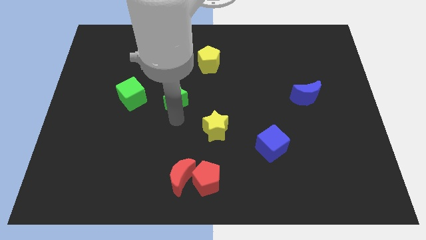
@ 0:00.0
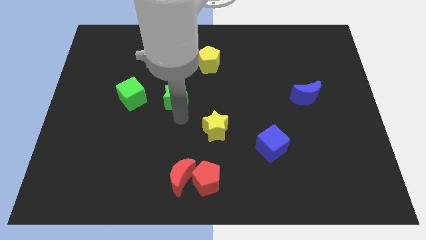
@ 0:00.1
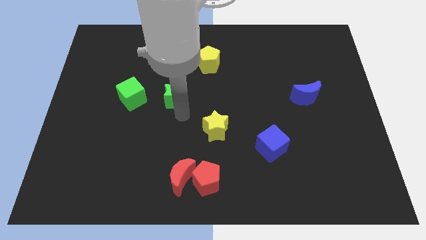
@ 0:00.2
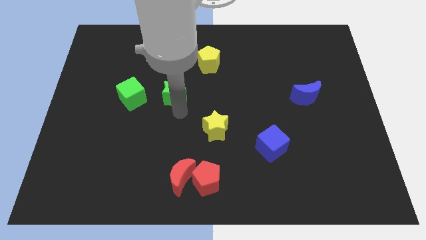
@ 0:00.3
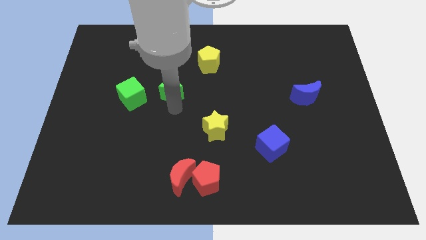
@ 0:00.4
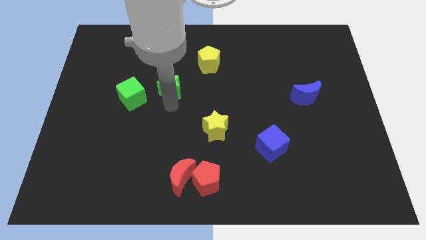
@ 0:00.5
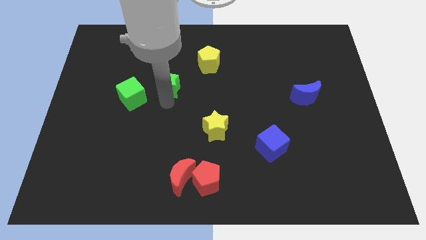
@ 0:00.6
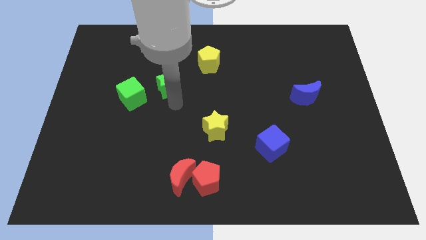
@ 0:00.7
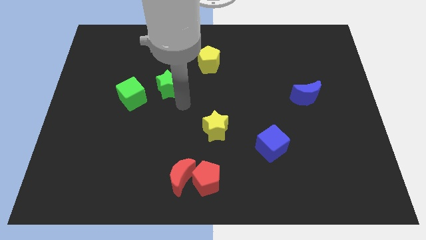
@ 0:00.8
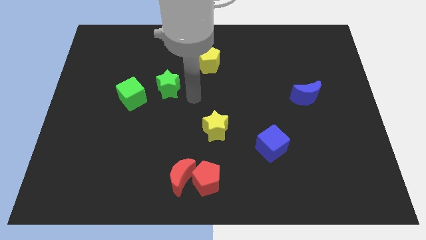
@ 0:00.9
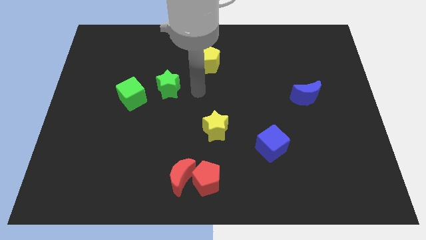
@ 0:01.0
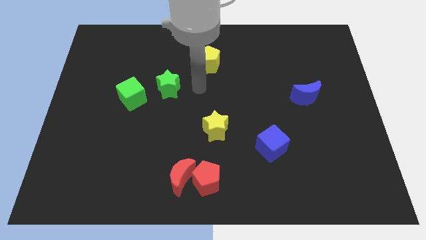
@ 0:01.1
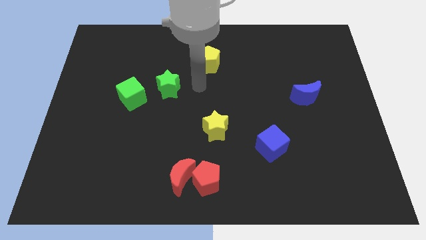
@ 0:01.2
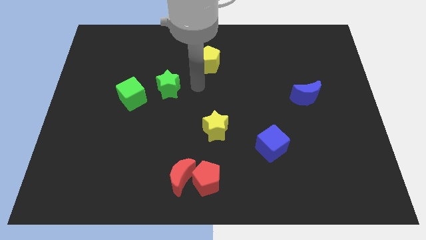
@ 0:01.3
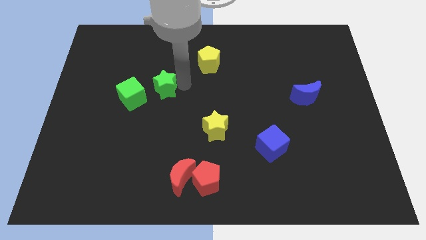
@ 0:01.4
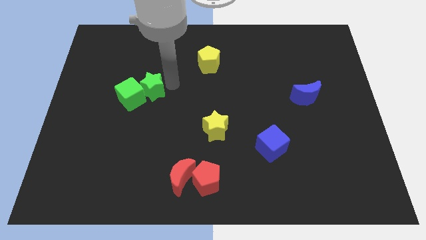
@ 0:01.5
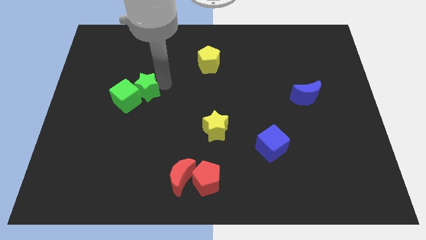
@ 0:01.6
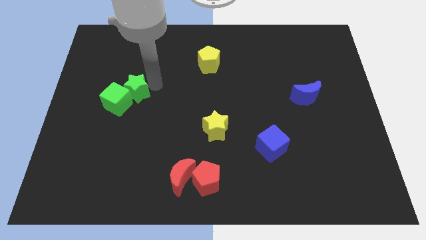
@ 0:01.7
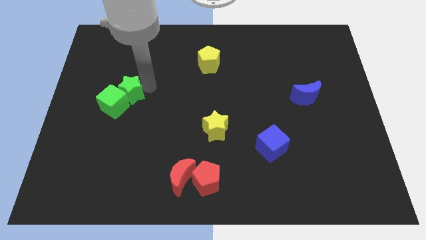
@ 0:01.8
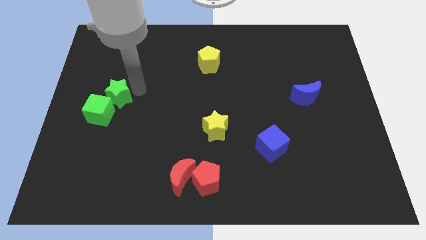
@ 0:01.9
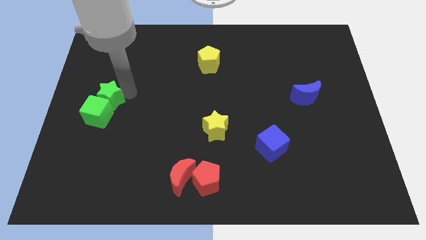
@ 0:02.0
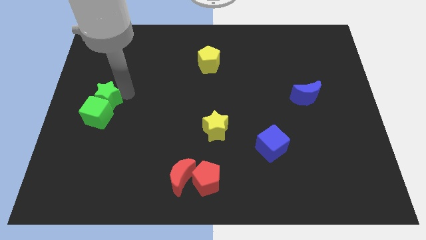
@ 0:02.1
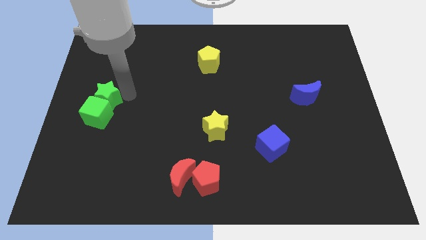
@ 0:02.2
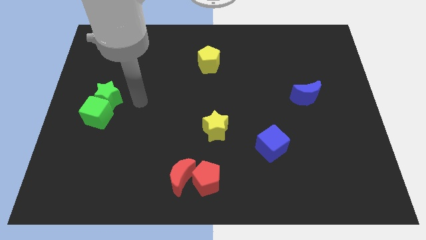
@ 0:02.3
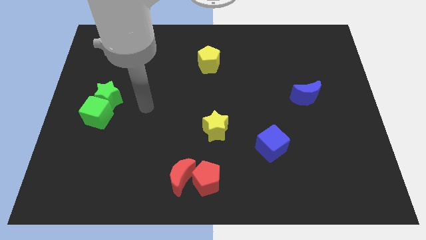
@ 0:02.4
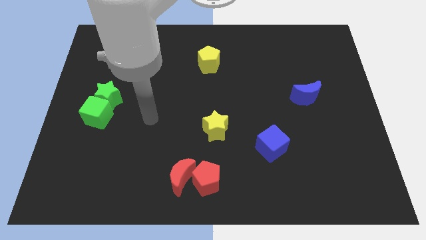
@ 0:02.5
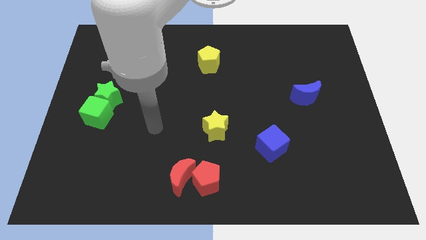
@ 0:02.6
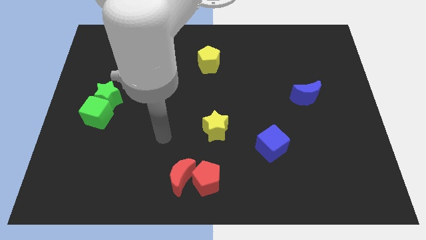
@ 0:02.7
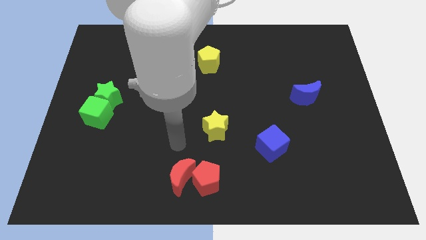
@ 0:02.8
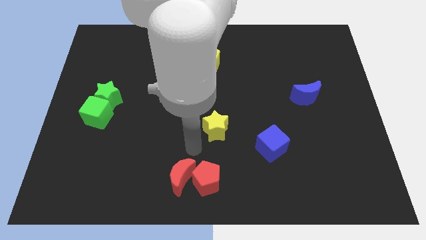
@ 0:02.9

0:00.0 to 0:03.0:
move green star green cube to the center left

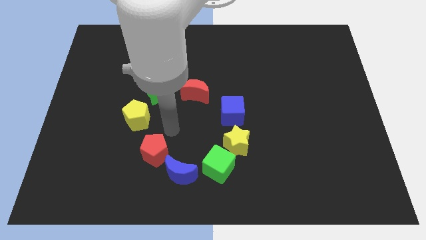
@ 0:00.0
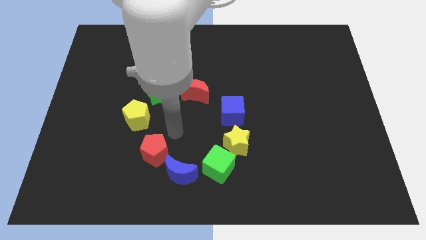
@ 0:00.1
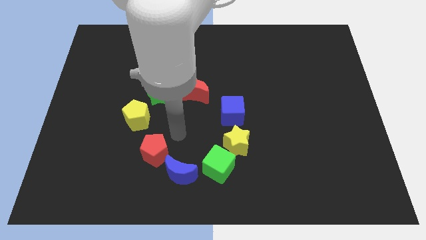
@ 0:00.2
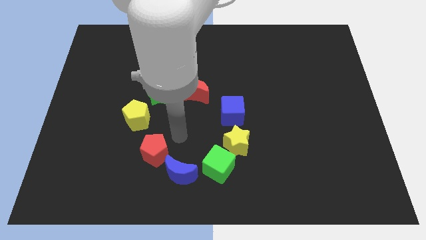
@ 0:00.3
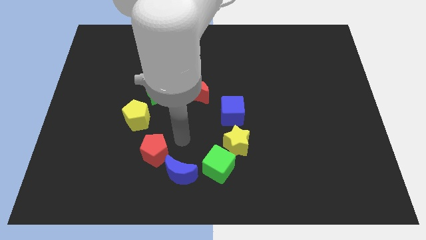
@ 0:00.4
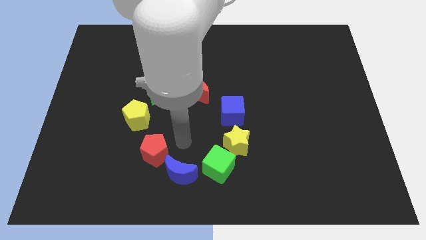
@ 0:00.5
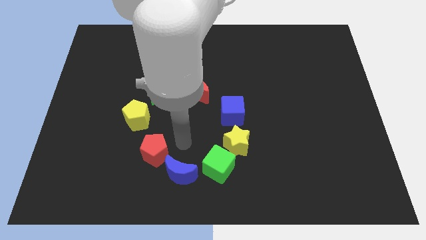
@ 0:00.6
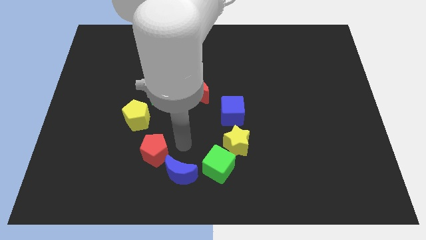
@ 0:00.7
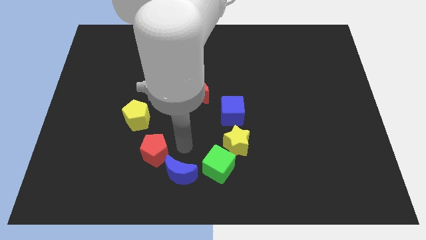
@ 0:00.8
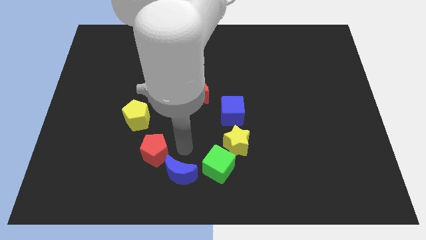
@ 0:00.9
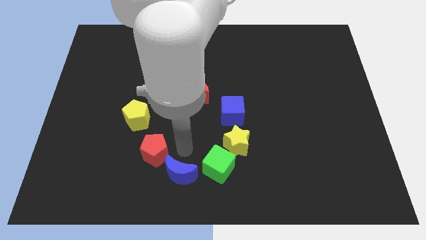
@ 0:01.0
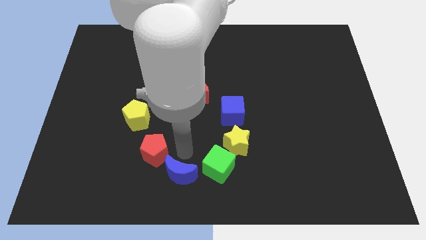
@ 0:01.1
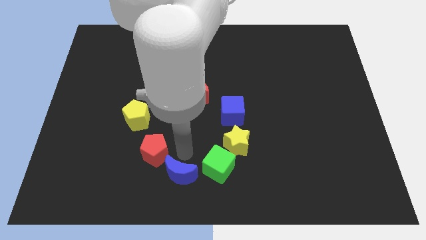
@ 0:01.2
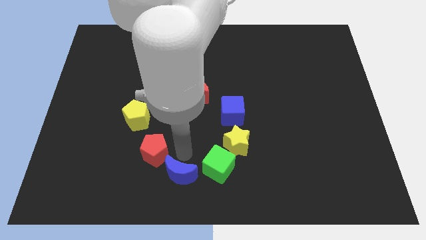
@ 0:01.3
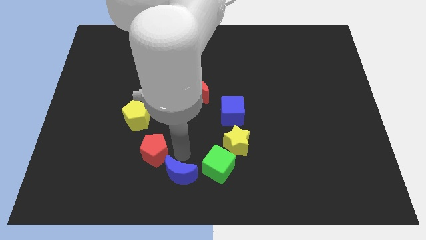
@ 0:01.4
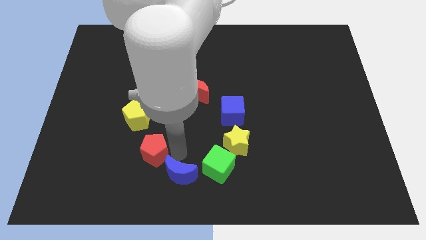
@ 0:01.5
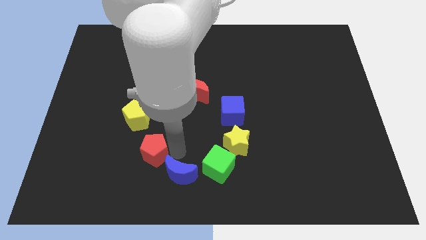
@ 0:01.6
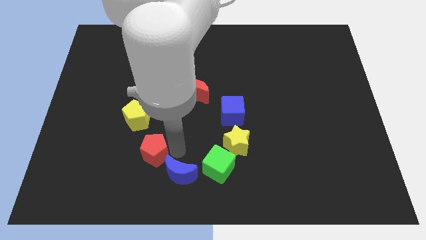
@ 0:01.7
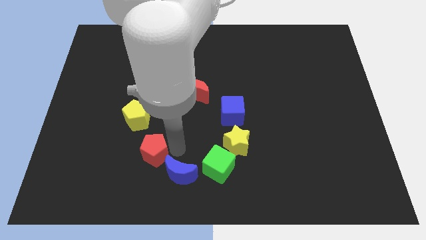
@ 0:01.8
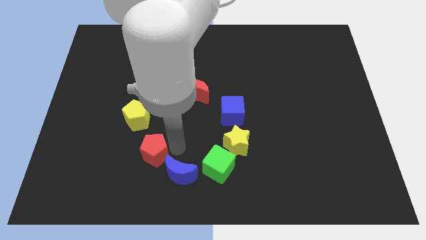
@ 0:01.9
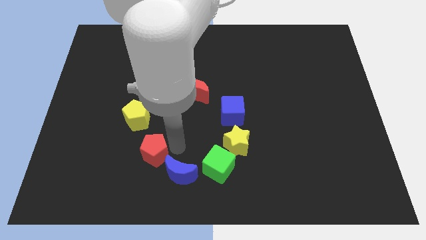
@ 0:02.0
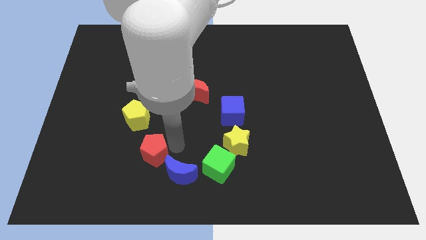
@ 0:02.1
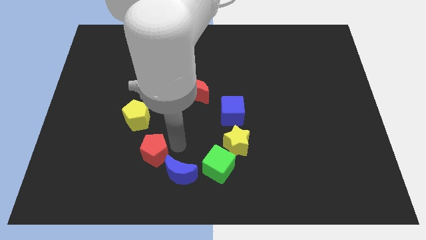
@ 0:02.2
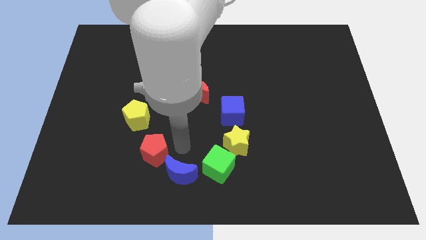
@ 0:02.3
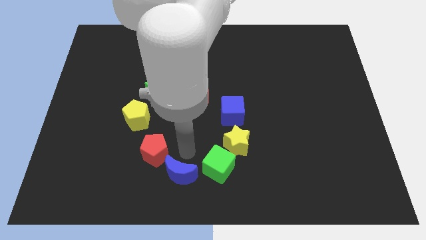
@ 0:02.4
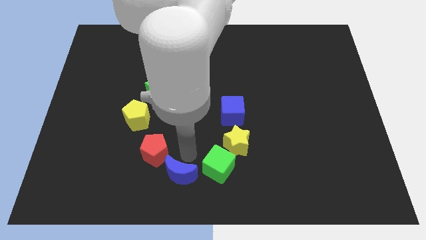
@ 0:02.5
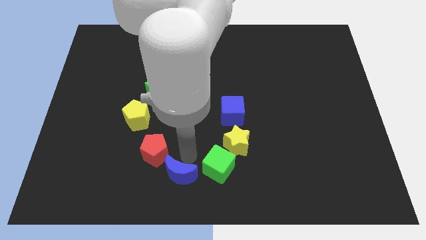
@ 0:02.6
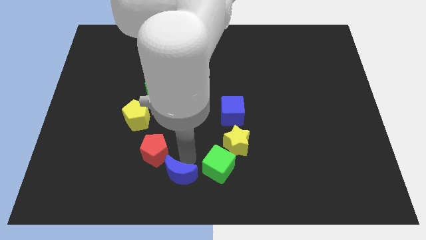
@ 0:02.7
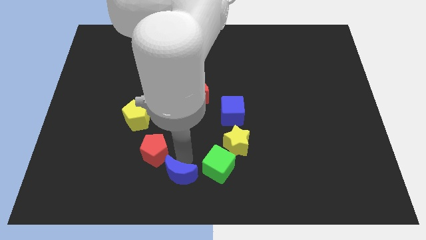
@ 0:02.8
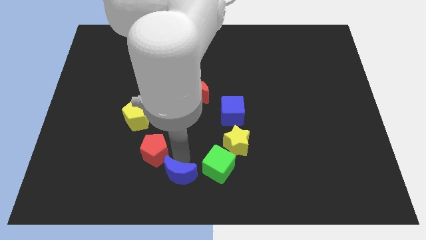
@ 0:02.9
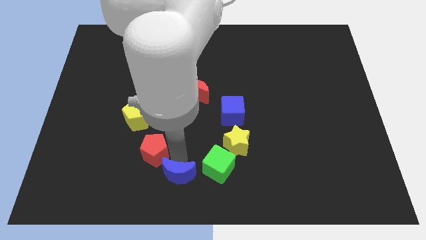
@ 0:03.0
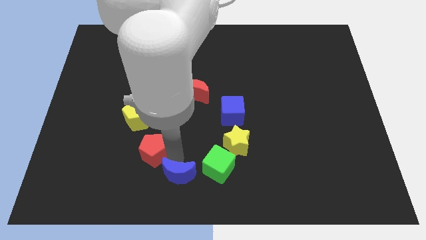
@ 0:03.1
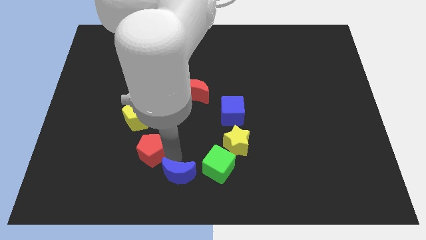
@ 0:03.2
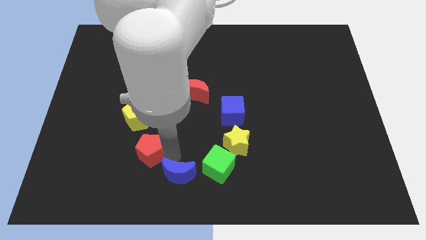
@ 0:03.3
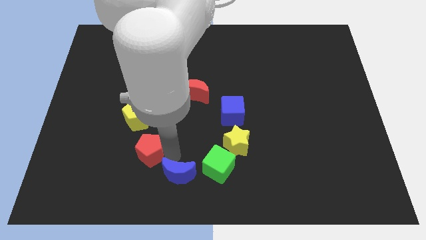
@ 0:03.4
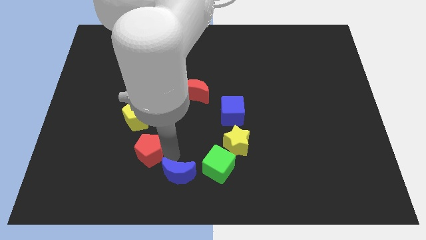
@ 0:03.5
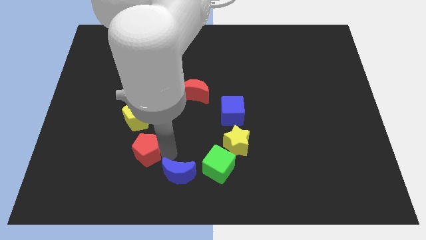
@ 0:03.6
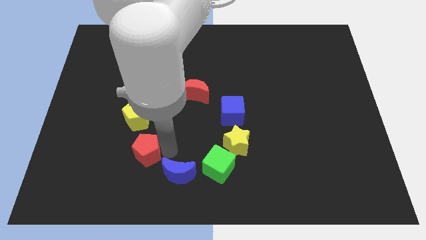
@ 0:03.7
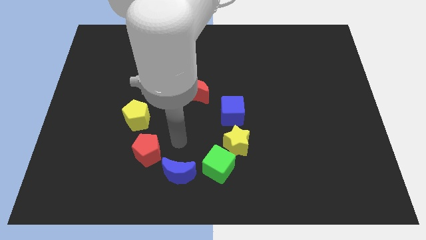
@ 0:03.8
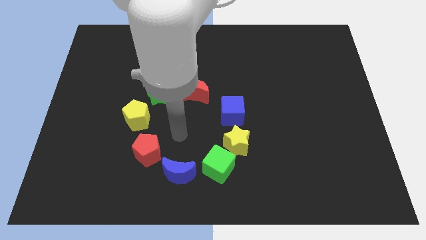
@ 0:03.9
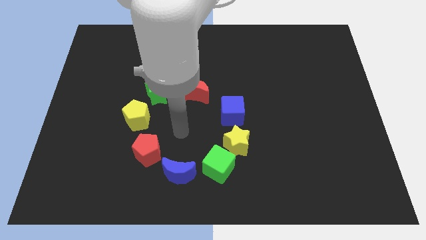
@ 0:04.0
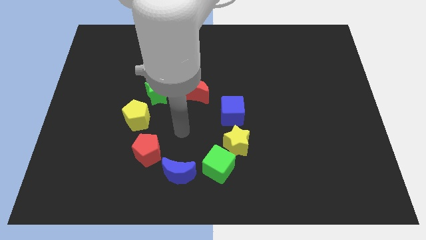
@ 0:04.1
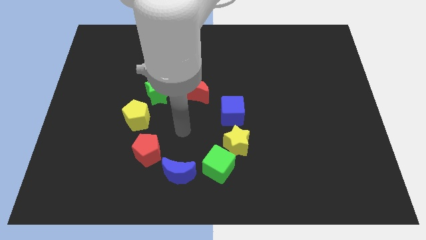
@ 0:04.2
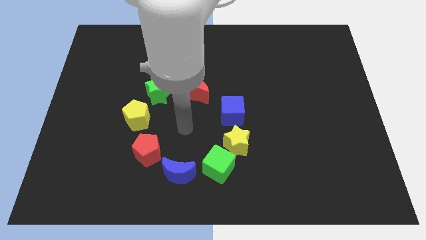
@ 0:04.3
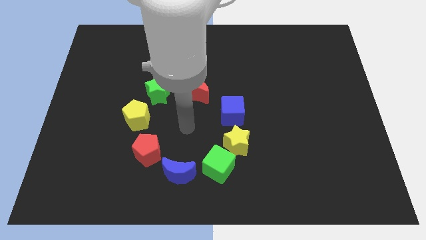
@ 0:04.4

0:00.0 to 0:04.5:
place your arm in the center of the blocks

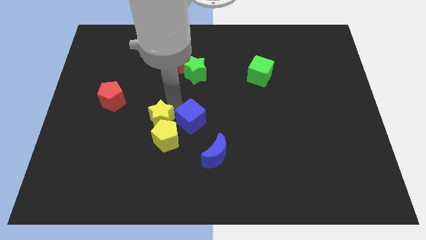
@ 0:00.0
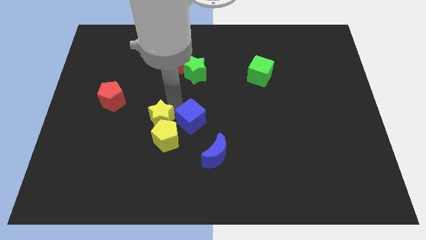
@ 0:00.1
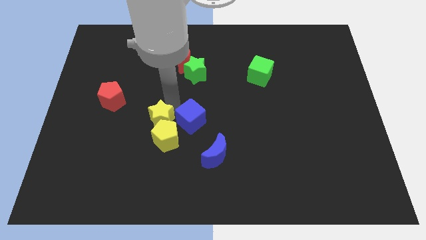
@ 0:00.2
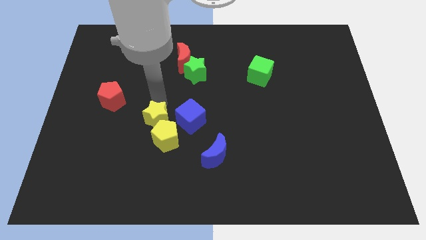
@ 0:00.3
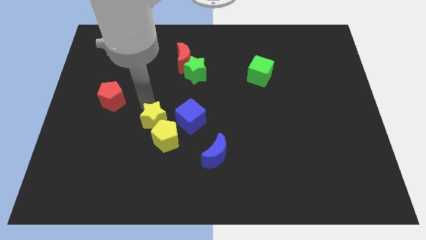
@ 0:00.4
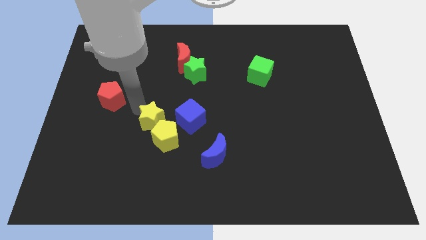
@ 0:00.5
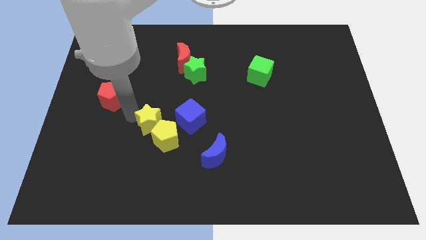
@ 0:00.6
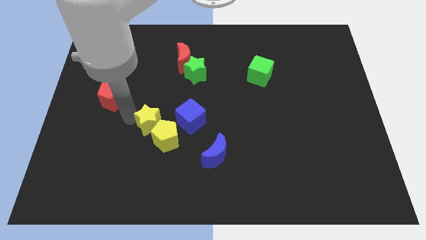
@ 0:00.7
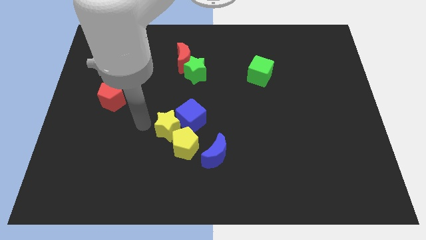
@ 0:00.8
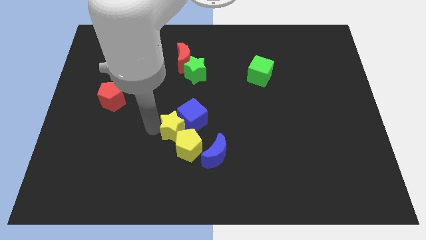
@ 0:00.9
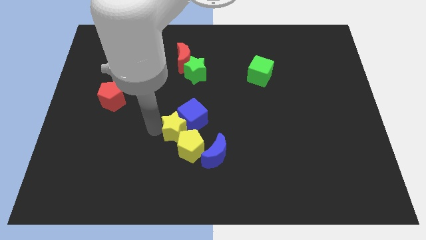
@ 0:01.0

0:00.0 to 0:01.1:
push yellow star into yellow pentagon

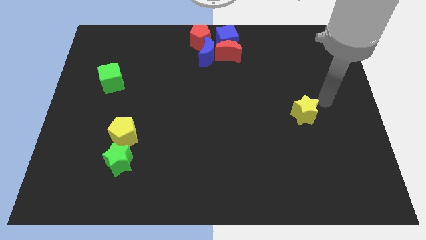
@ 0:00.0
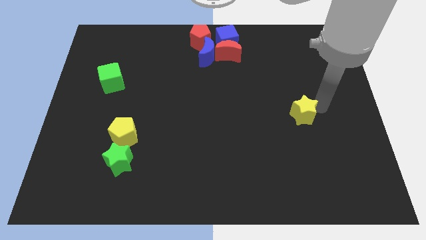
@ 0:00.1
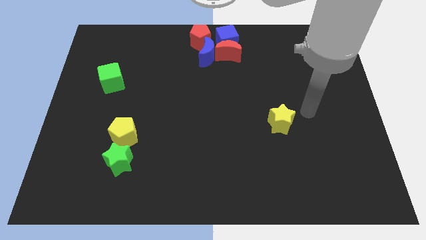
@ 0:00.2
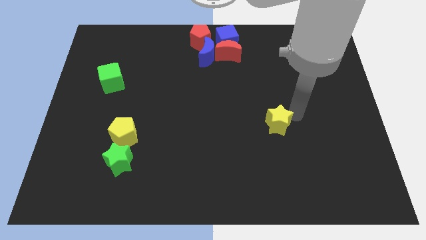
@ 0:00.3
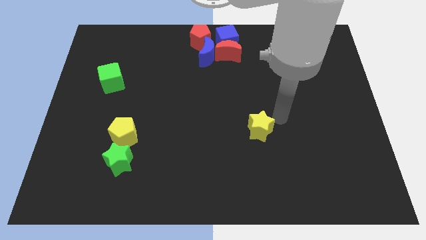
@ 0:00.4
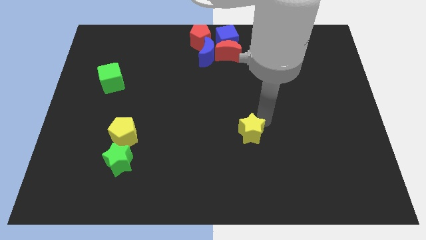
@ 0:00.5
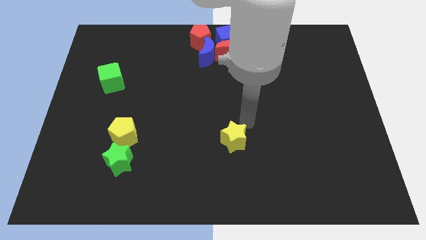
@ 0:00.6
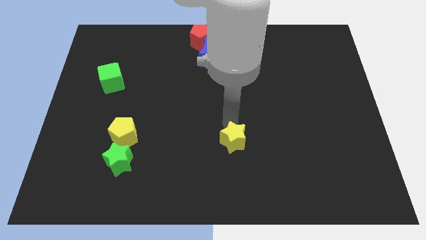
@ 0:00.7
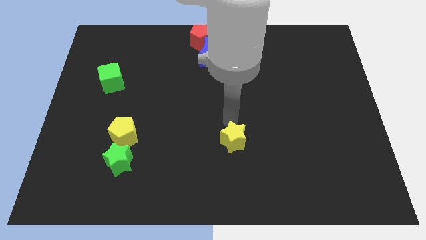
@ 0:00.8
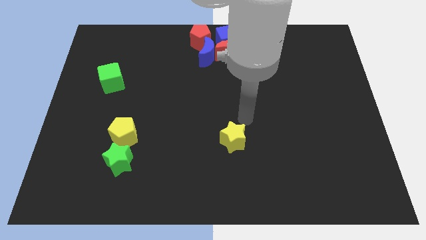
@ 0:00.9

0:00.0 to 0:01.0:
move the yellow star diagonally down
